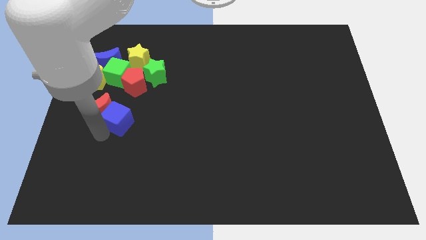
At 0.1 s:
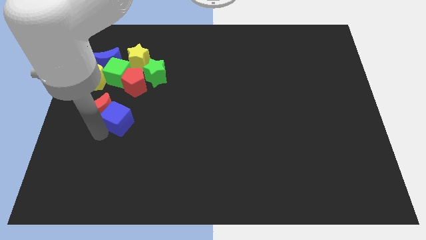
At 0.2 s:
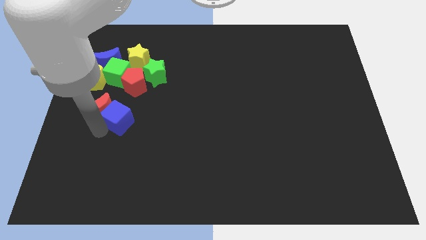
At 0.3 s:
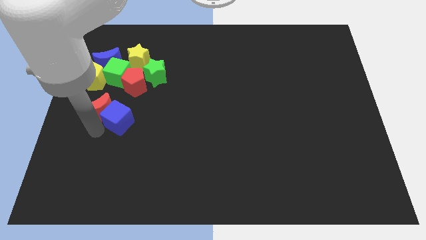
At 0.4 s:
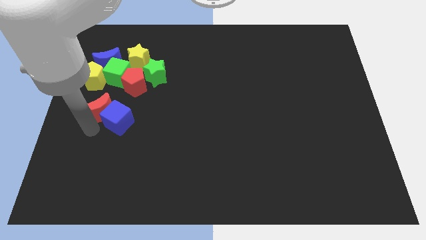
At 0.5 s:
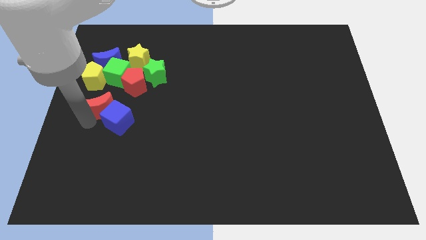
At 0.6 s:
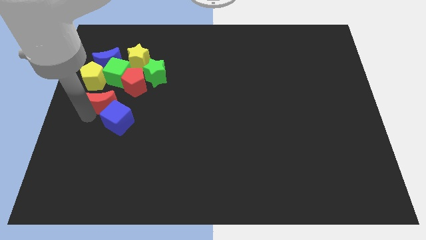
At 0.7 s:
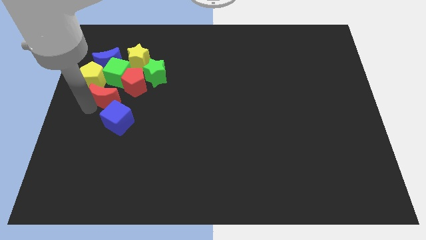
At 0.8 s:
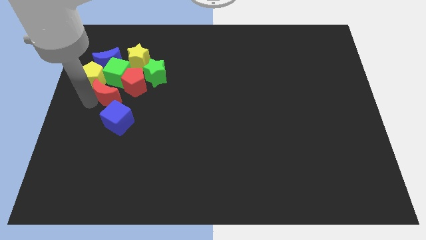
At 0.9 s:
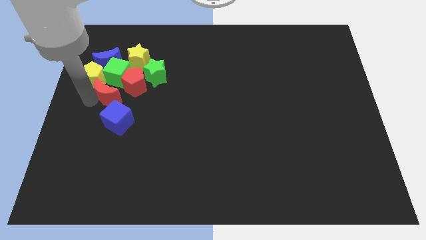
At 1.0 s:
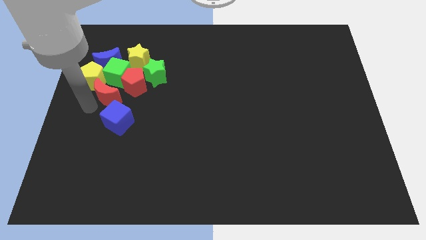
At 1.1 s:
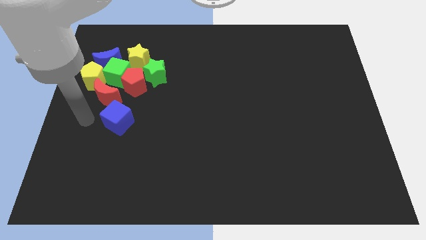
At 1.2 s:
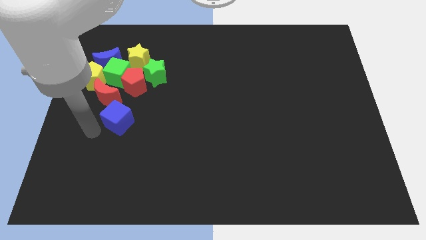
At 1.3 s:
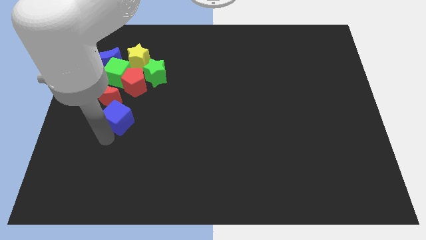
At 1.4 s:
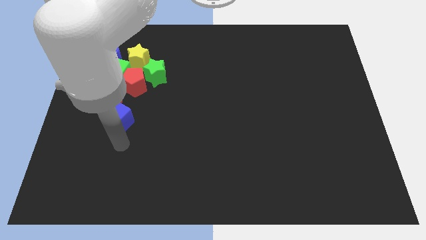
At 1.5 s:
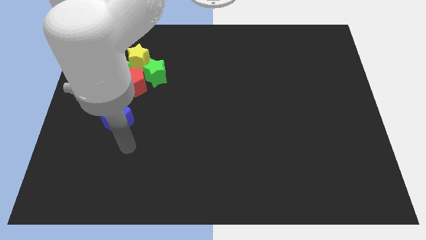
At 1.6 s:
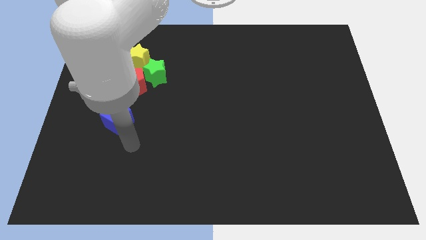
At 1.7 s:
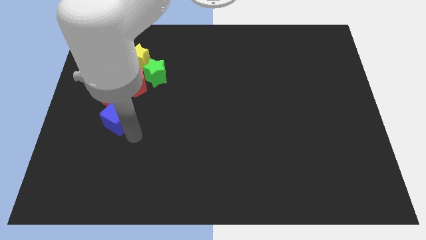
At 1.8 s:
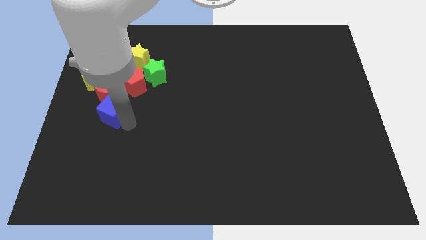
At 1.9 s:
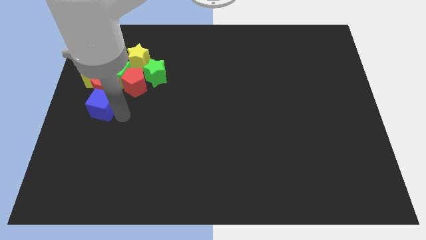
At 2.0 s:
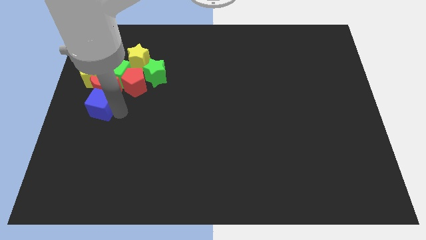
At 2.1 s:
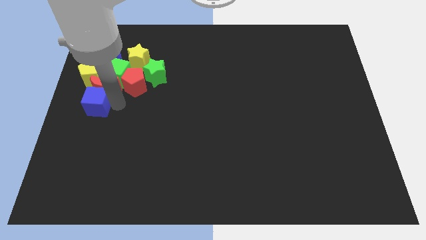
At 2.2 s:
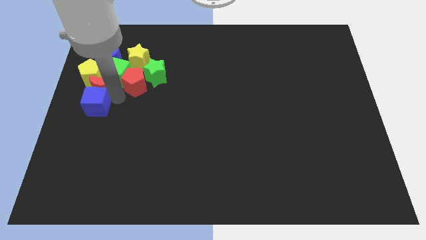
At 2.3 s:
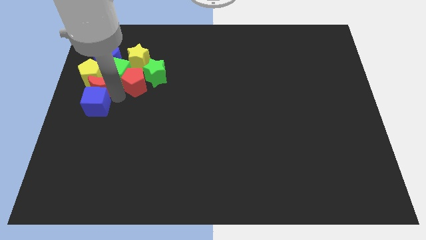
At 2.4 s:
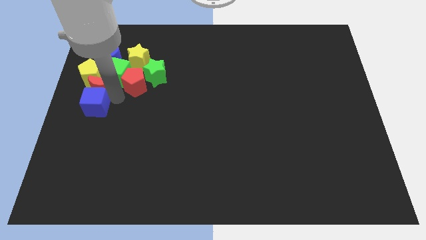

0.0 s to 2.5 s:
place the red moon and blue cube into the group of blocks

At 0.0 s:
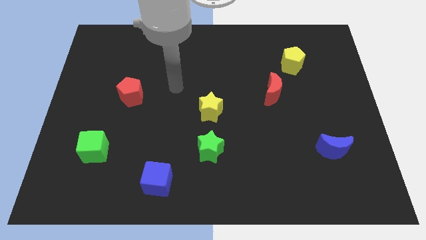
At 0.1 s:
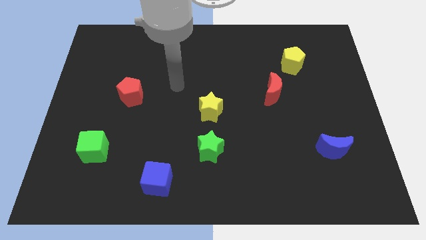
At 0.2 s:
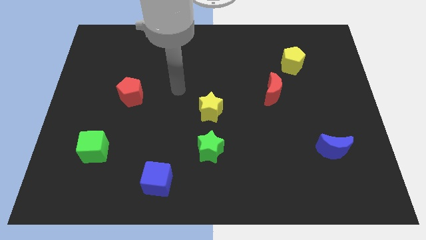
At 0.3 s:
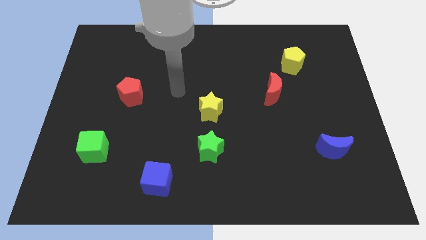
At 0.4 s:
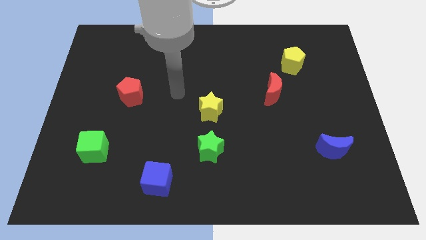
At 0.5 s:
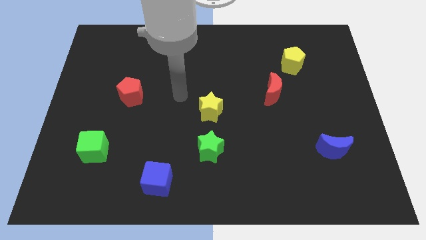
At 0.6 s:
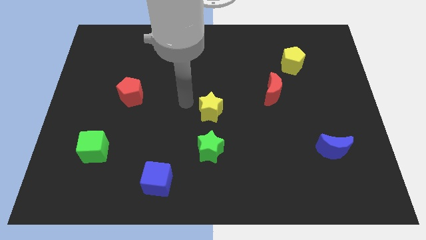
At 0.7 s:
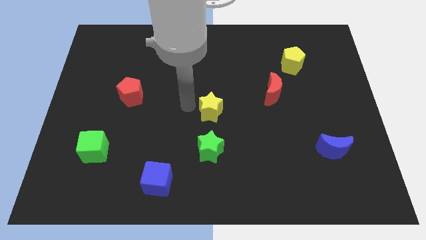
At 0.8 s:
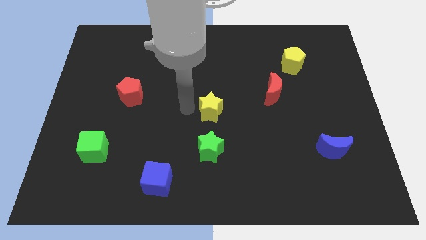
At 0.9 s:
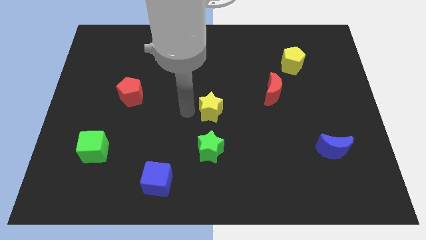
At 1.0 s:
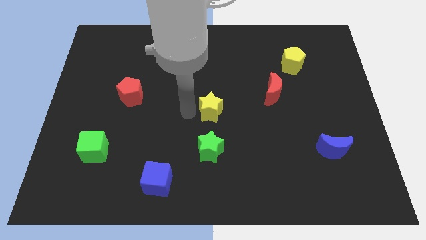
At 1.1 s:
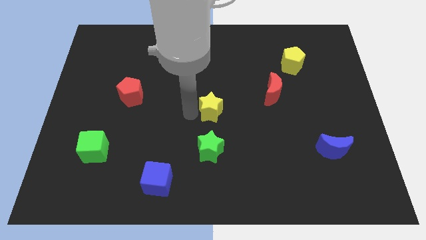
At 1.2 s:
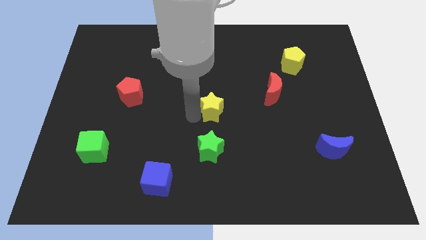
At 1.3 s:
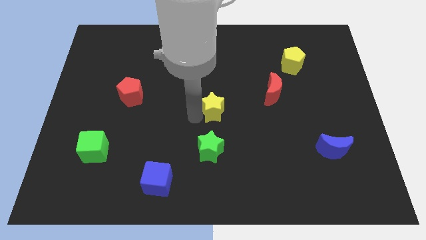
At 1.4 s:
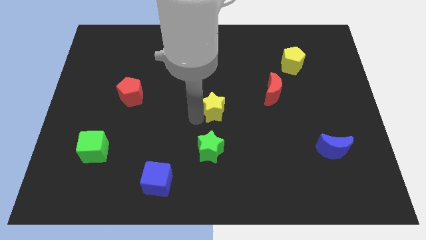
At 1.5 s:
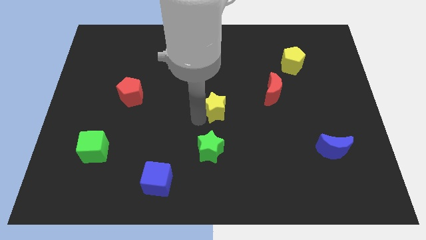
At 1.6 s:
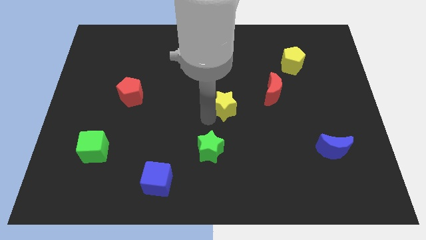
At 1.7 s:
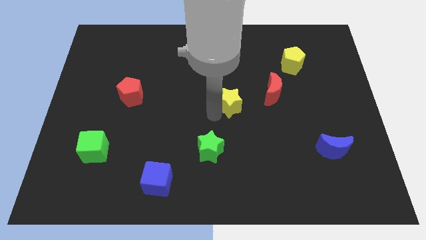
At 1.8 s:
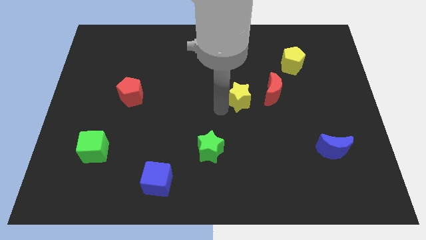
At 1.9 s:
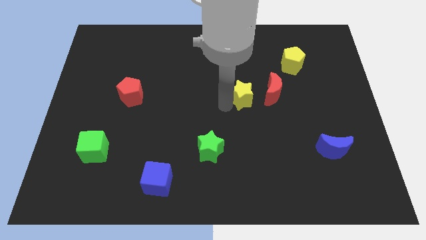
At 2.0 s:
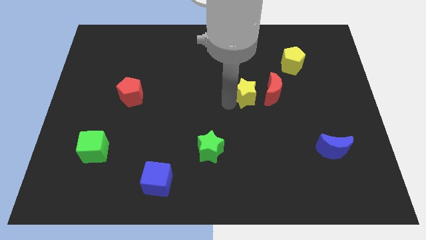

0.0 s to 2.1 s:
push the yellow star to the left of the red crescent

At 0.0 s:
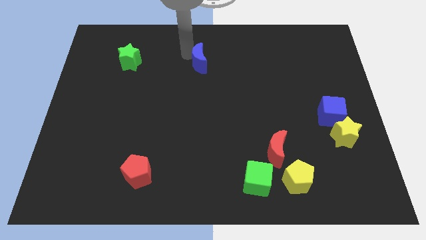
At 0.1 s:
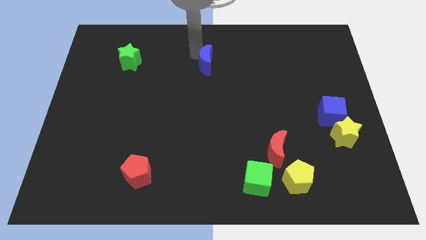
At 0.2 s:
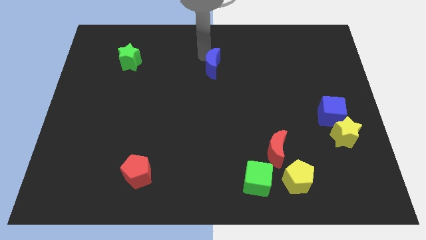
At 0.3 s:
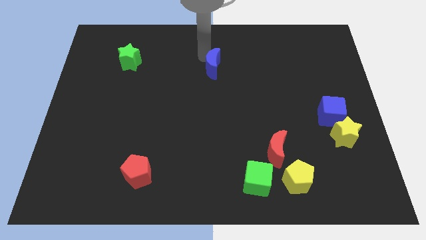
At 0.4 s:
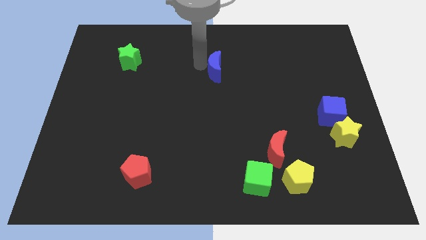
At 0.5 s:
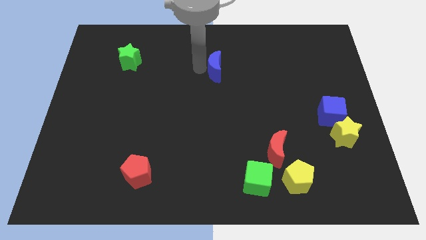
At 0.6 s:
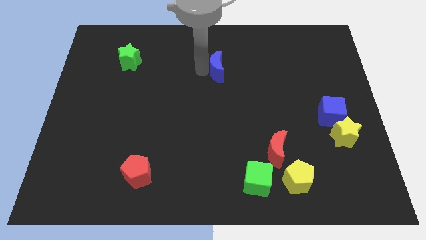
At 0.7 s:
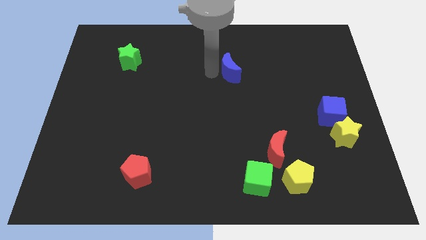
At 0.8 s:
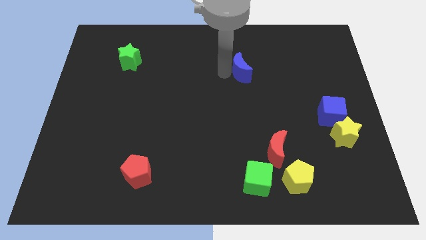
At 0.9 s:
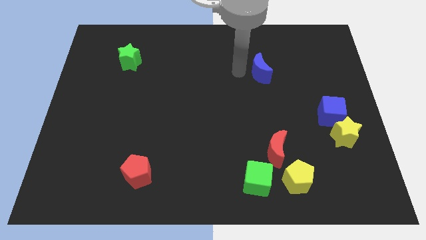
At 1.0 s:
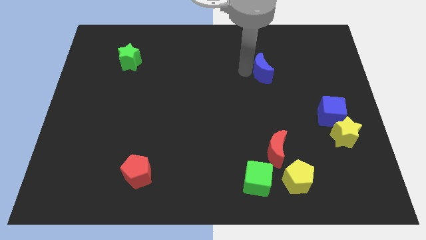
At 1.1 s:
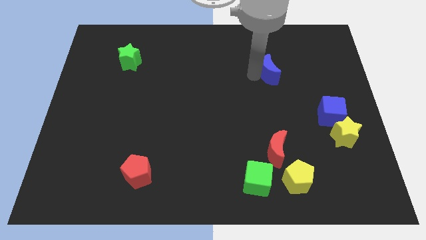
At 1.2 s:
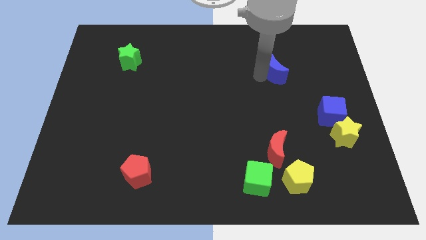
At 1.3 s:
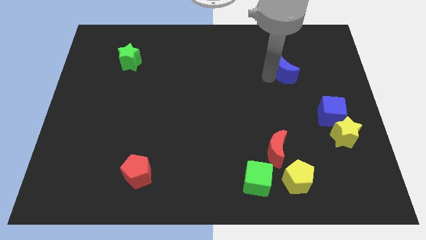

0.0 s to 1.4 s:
move the blue crescent to right side

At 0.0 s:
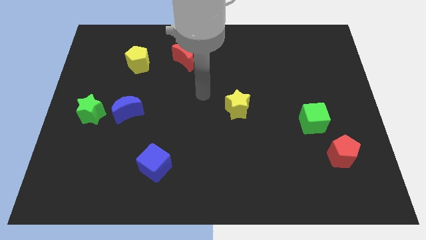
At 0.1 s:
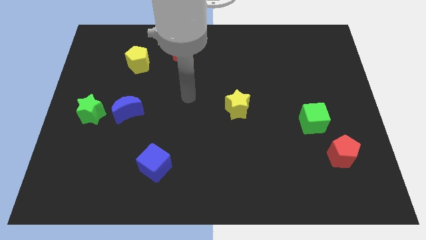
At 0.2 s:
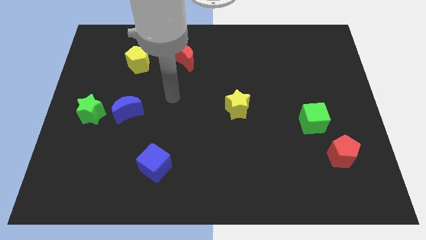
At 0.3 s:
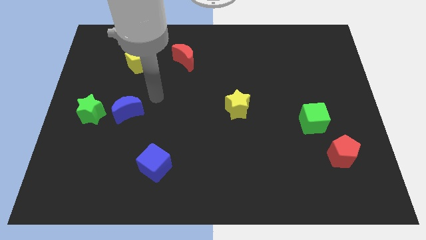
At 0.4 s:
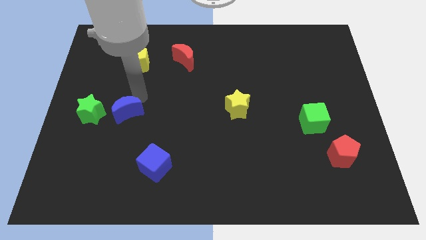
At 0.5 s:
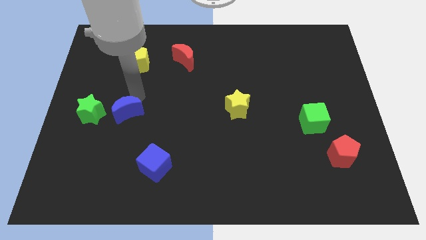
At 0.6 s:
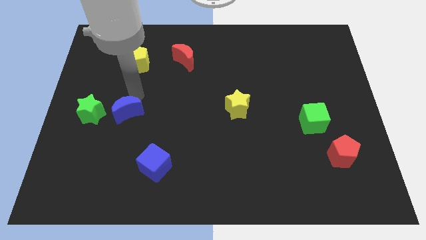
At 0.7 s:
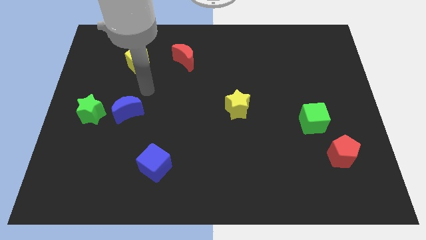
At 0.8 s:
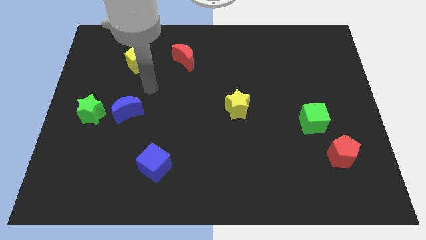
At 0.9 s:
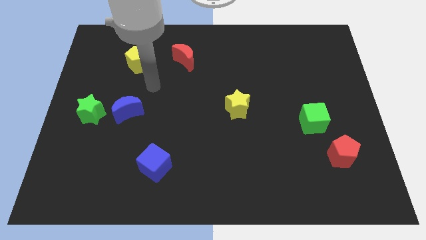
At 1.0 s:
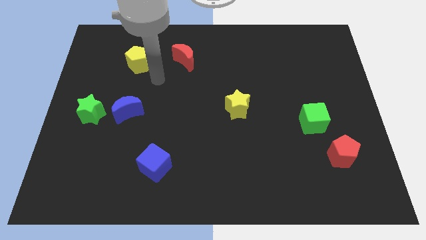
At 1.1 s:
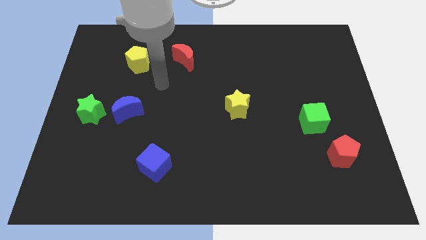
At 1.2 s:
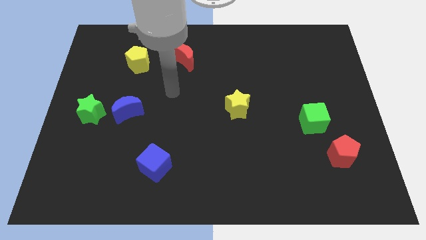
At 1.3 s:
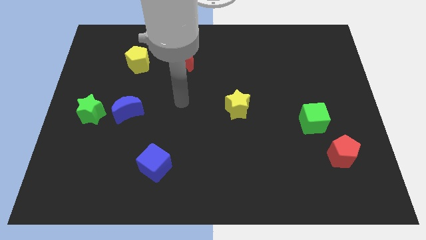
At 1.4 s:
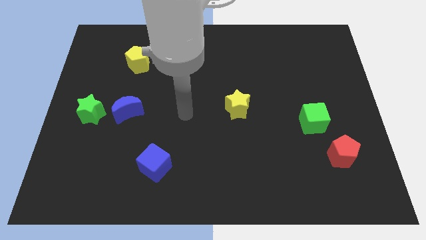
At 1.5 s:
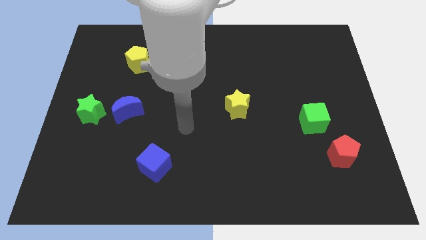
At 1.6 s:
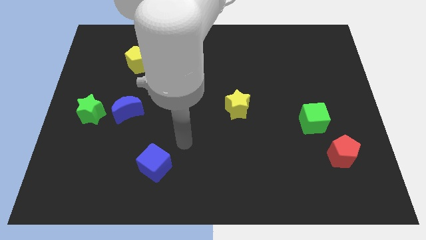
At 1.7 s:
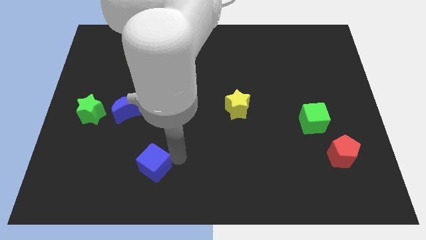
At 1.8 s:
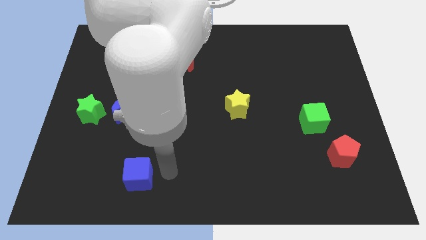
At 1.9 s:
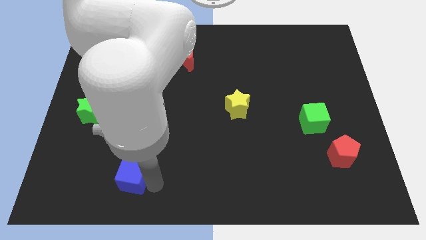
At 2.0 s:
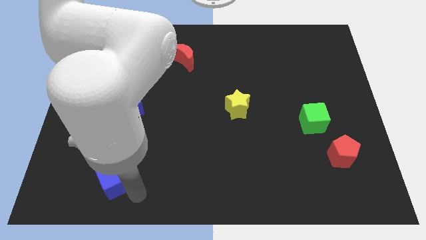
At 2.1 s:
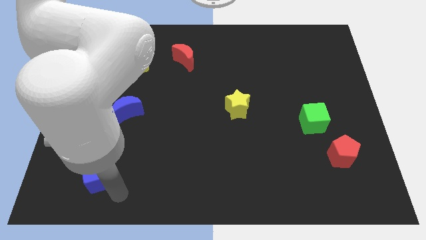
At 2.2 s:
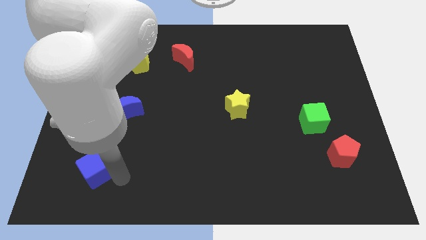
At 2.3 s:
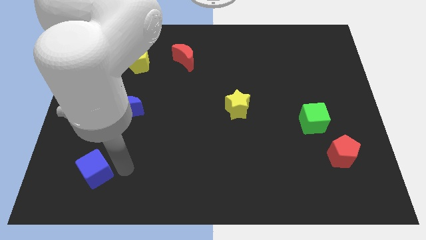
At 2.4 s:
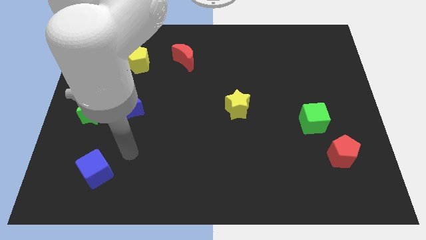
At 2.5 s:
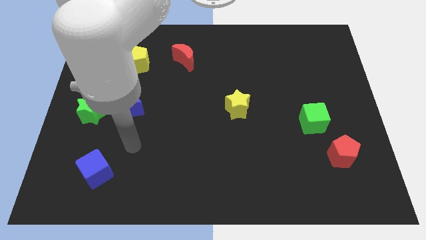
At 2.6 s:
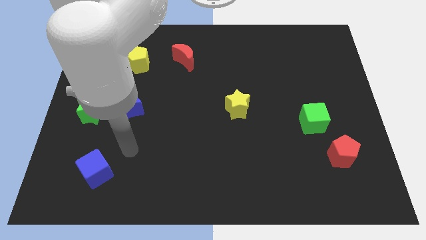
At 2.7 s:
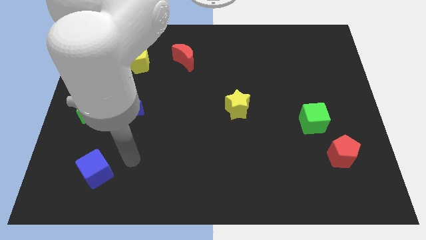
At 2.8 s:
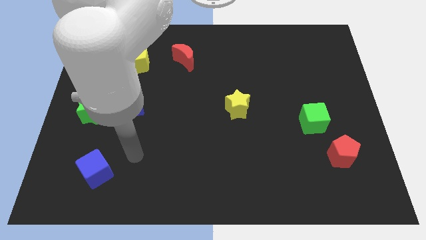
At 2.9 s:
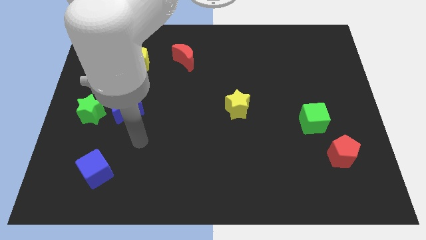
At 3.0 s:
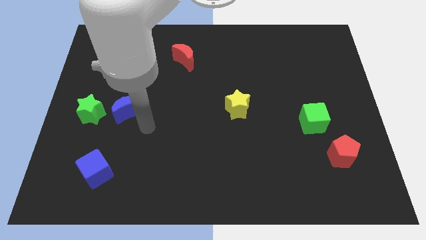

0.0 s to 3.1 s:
push the blue cube slightly to the left
